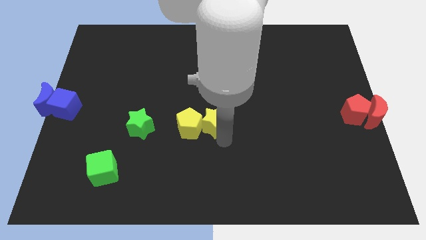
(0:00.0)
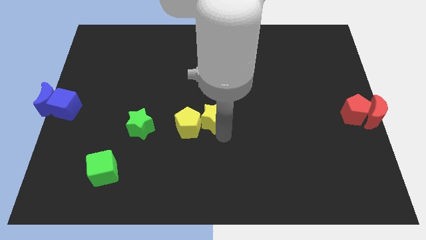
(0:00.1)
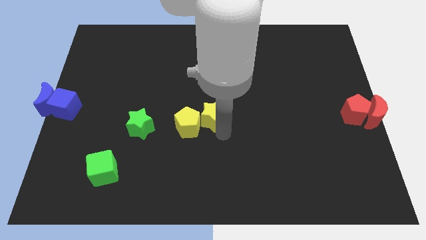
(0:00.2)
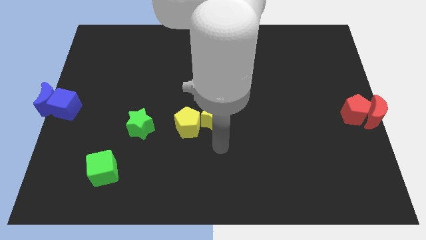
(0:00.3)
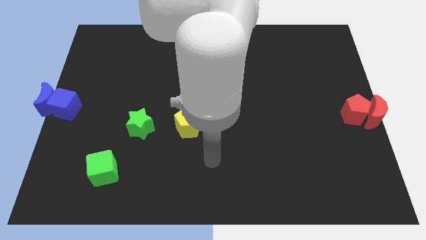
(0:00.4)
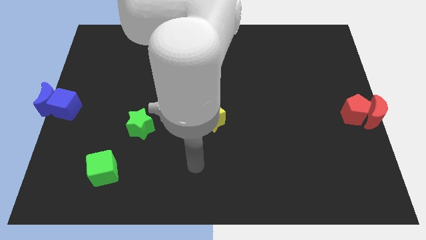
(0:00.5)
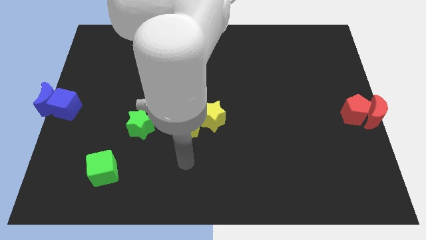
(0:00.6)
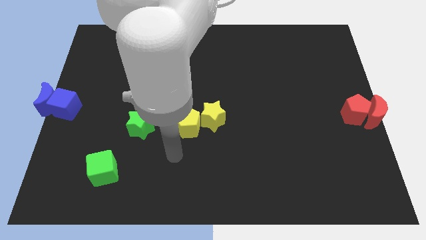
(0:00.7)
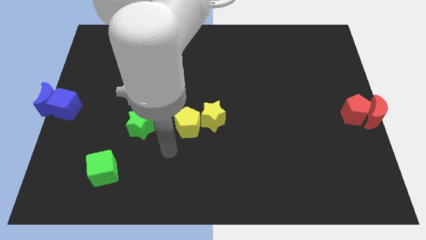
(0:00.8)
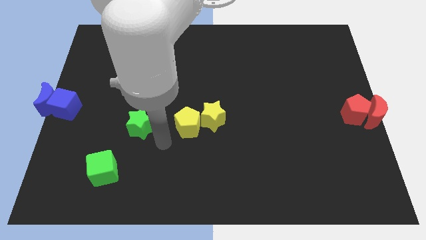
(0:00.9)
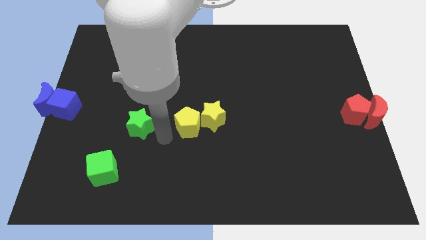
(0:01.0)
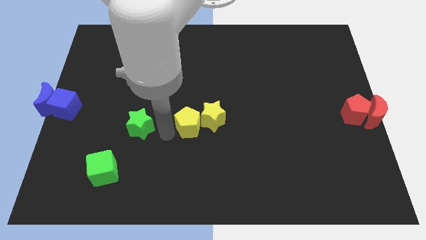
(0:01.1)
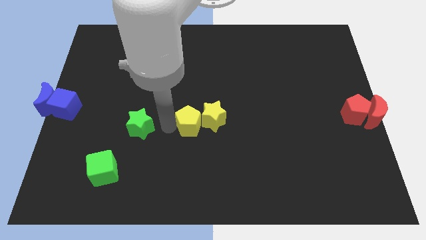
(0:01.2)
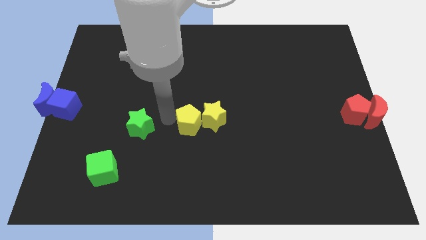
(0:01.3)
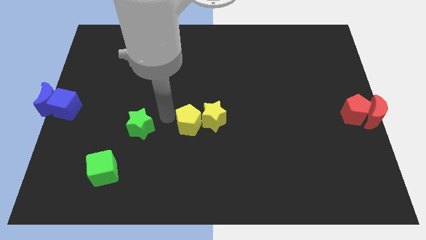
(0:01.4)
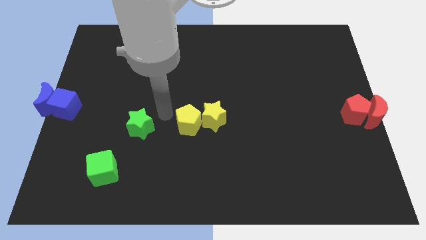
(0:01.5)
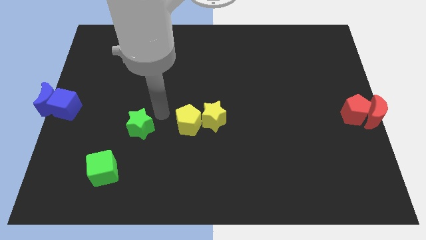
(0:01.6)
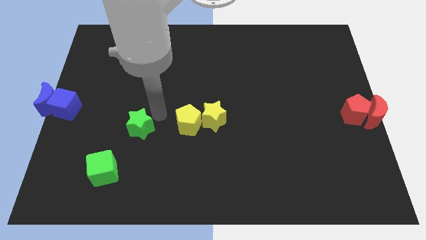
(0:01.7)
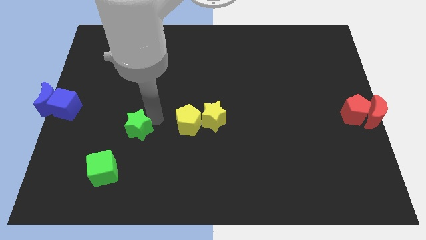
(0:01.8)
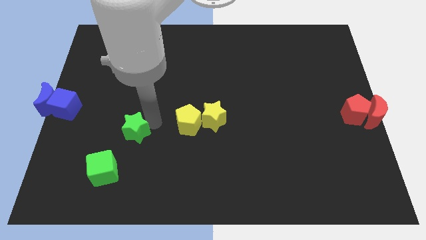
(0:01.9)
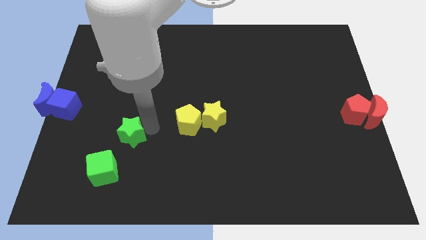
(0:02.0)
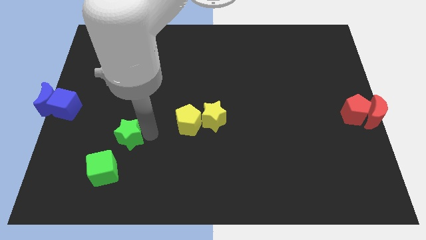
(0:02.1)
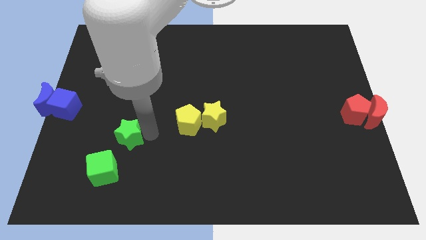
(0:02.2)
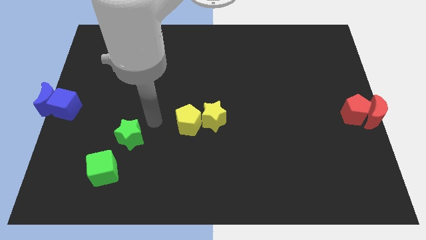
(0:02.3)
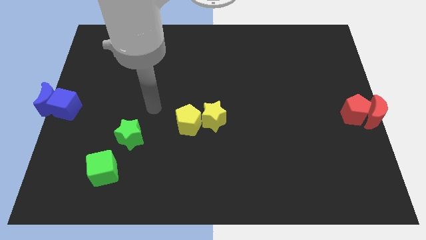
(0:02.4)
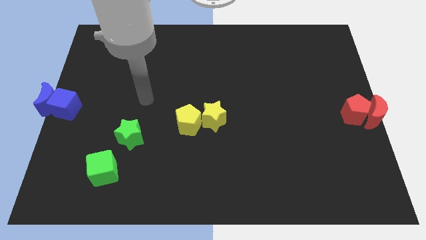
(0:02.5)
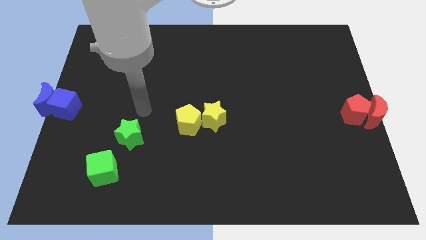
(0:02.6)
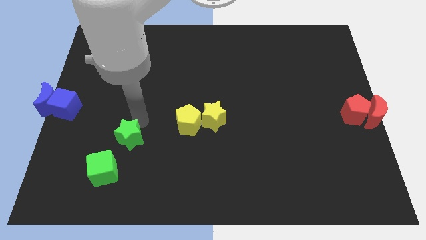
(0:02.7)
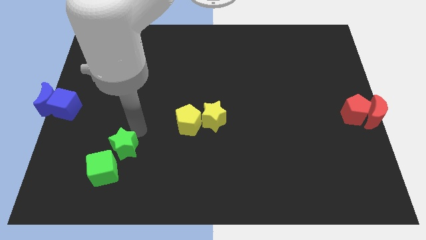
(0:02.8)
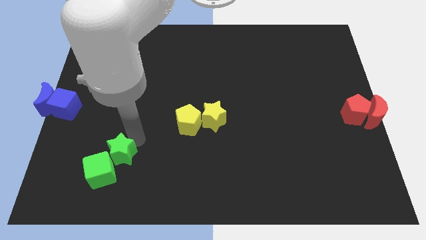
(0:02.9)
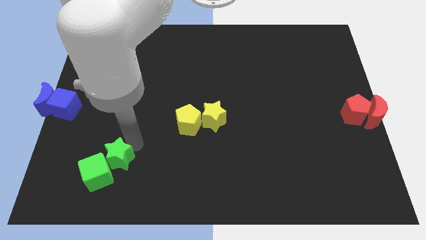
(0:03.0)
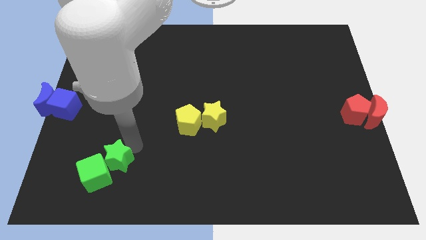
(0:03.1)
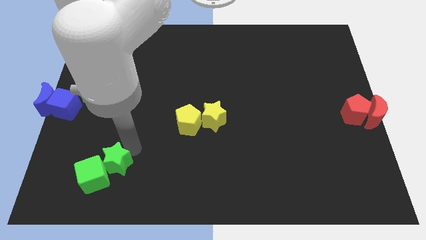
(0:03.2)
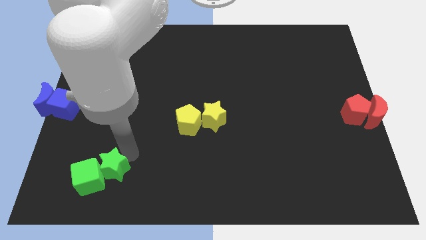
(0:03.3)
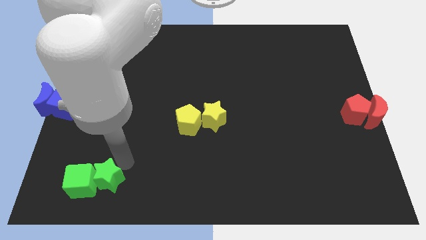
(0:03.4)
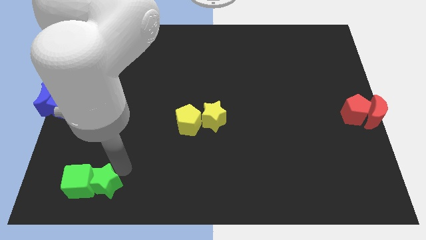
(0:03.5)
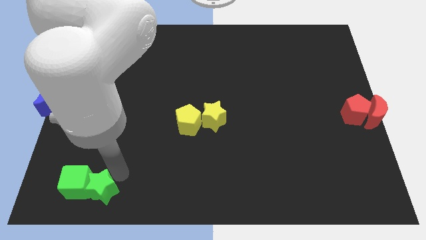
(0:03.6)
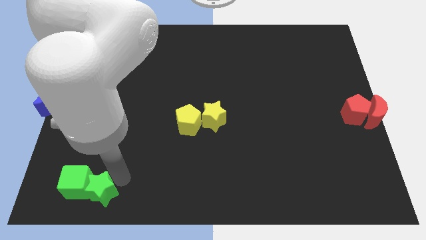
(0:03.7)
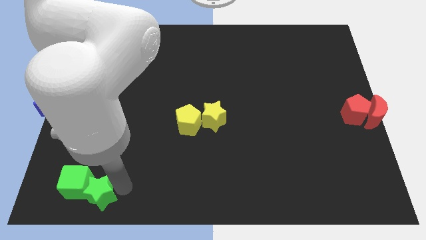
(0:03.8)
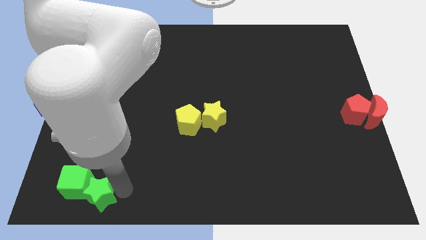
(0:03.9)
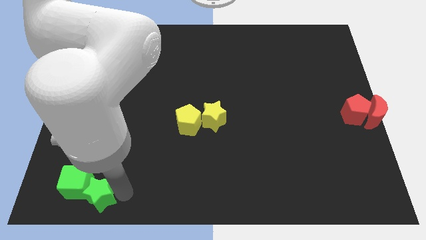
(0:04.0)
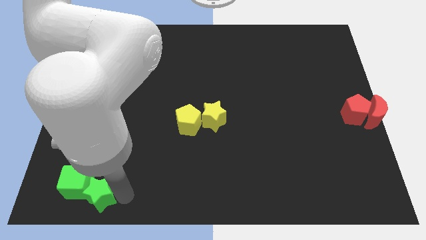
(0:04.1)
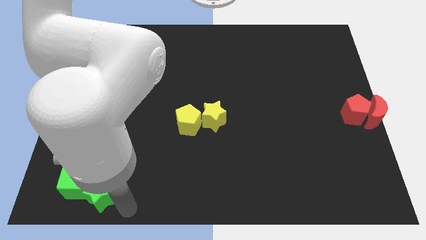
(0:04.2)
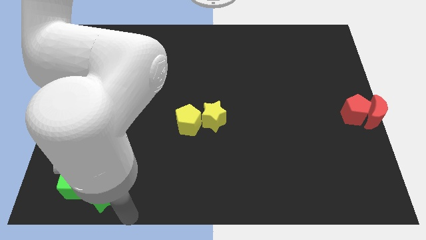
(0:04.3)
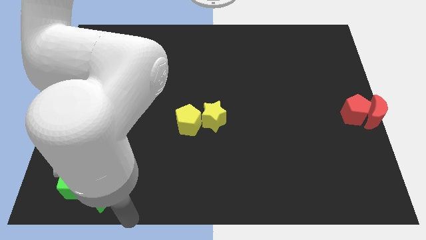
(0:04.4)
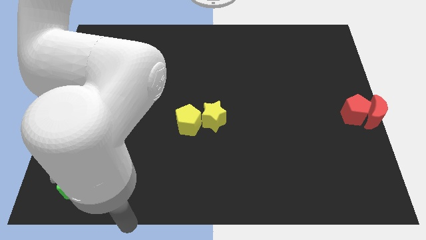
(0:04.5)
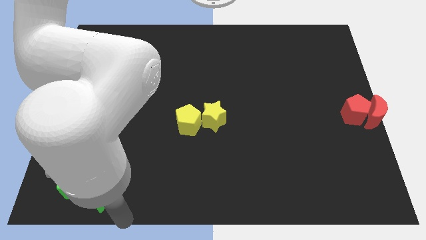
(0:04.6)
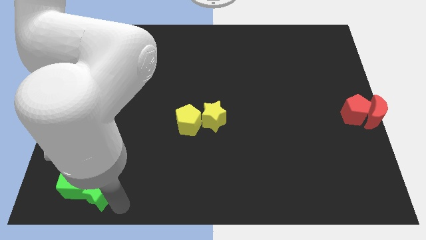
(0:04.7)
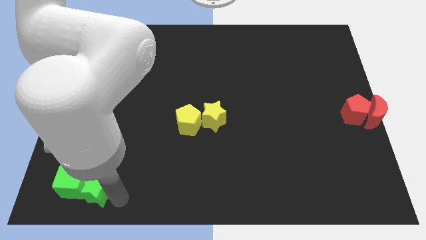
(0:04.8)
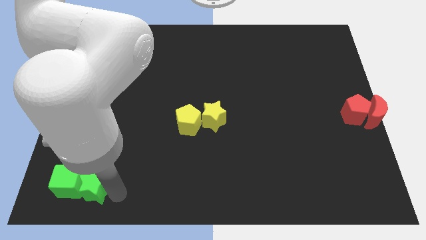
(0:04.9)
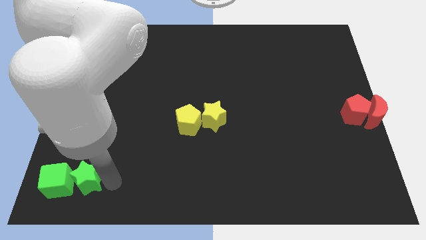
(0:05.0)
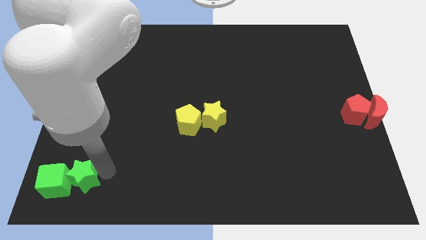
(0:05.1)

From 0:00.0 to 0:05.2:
move the green blocks to the bottom left

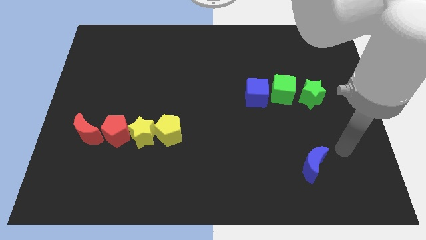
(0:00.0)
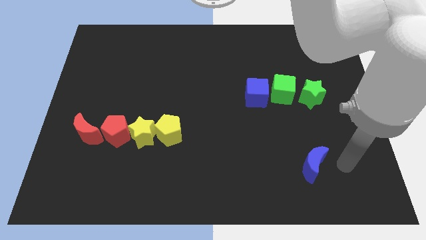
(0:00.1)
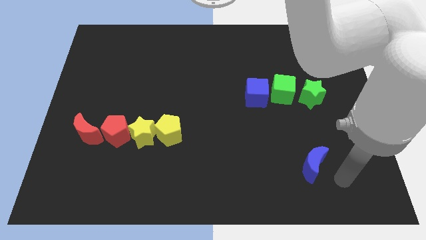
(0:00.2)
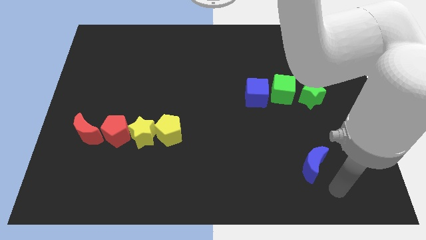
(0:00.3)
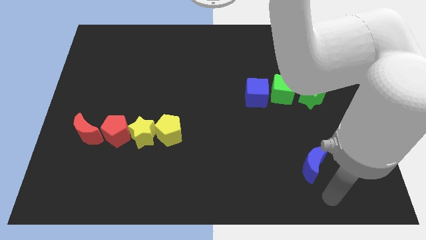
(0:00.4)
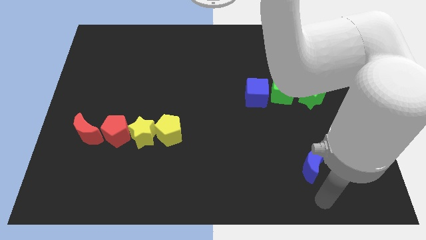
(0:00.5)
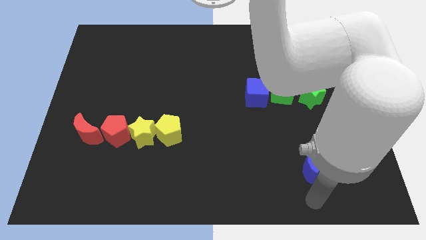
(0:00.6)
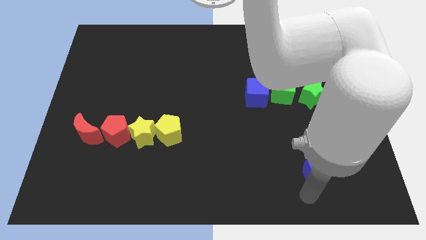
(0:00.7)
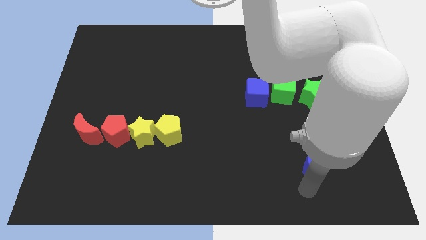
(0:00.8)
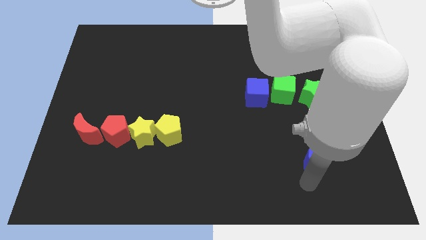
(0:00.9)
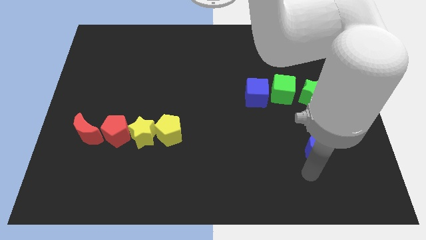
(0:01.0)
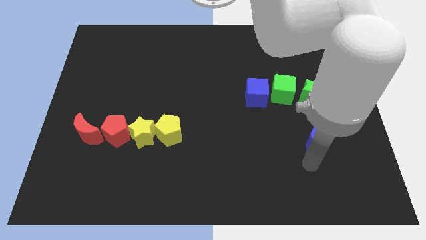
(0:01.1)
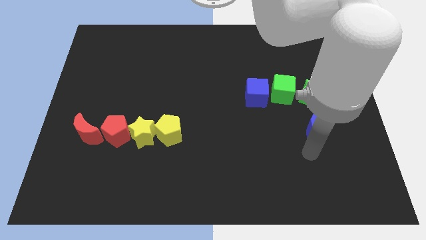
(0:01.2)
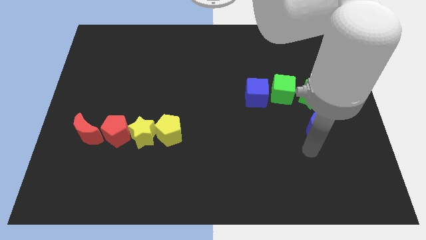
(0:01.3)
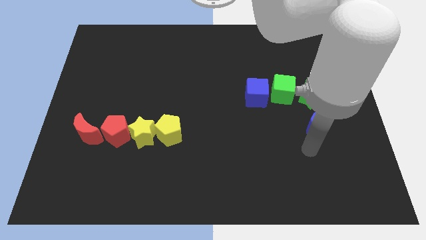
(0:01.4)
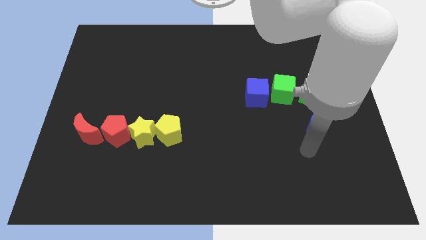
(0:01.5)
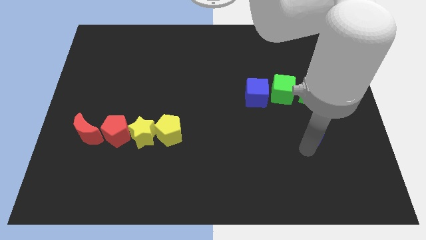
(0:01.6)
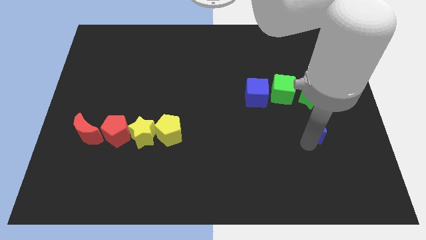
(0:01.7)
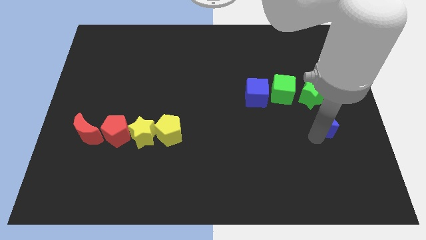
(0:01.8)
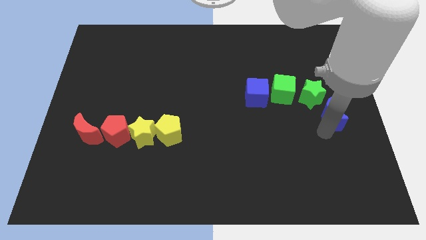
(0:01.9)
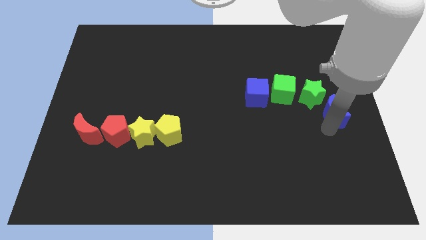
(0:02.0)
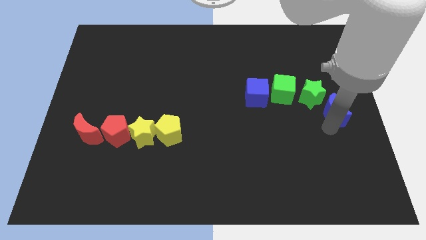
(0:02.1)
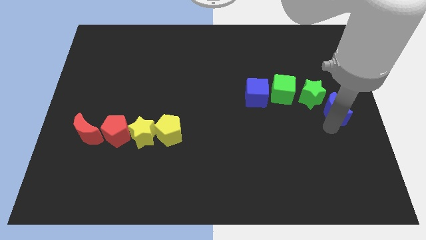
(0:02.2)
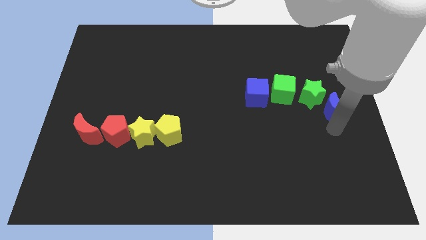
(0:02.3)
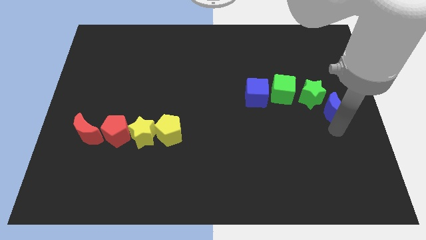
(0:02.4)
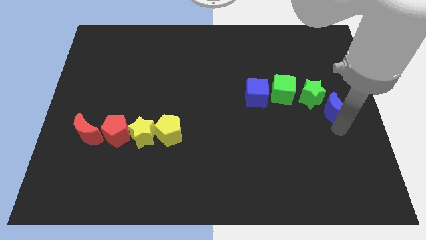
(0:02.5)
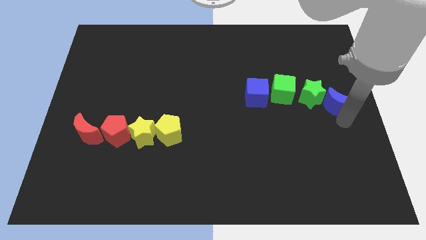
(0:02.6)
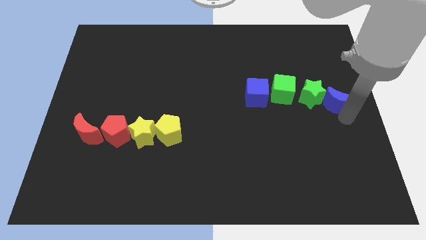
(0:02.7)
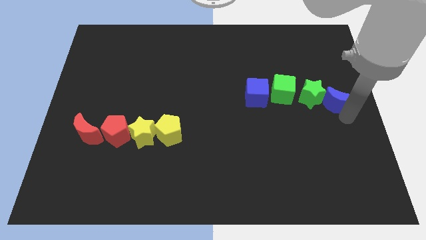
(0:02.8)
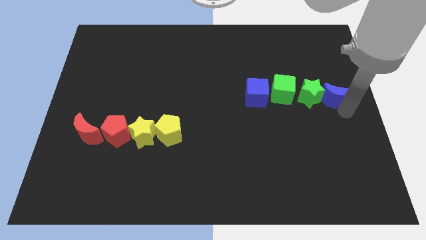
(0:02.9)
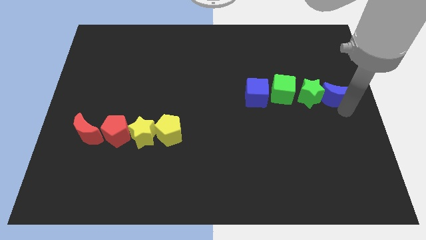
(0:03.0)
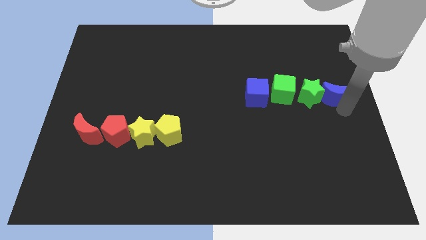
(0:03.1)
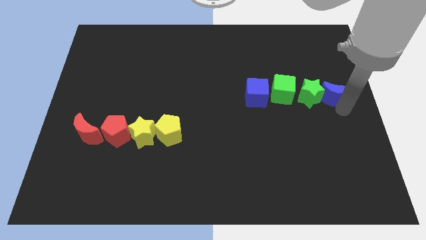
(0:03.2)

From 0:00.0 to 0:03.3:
move blue moon near to the green star

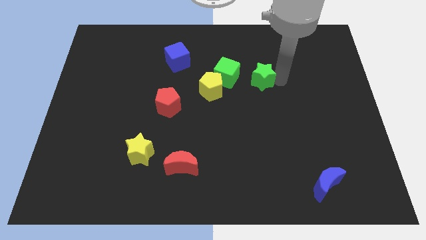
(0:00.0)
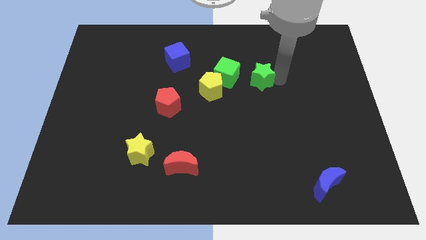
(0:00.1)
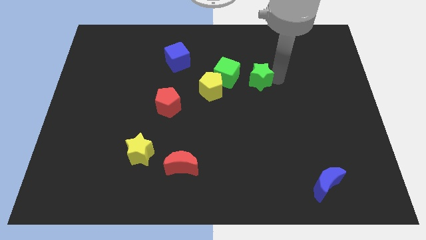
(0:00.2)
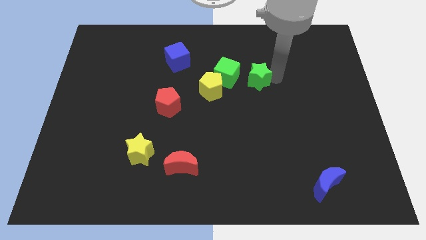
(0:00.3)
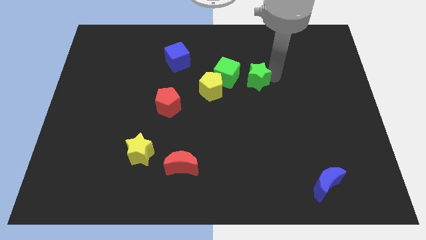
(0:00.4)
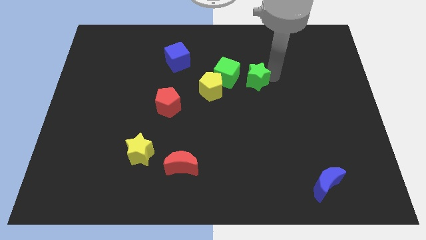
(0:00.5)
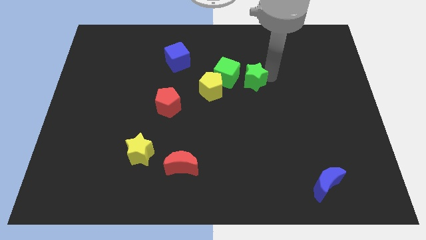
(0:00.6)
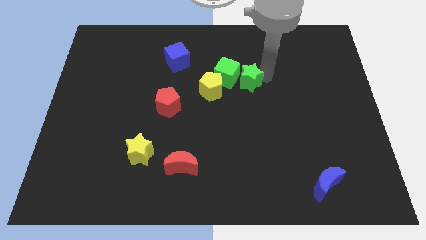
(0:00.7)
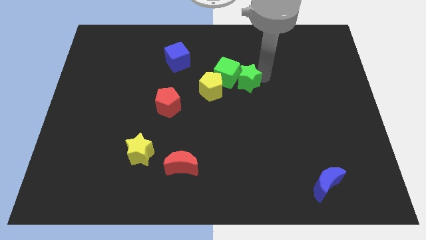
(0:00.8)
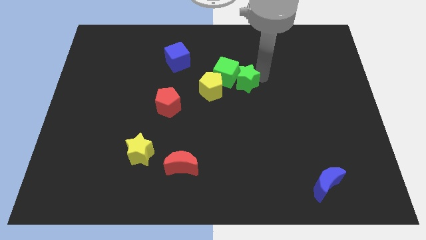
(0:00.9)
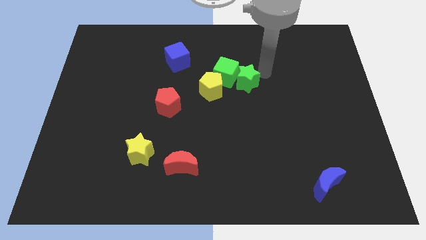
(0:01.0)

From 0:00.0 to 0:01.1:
make the green star touch the right side of the green cube
